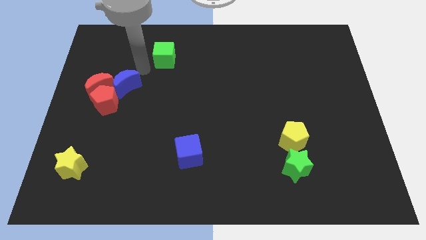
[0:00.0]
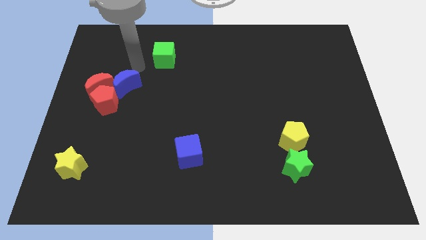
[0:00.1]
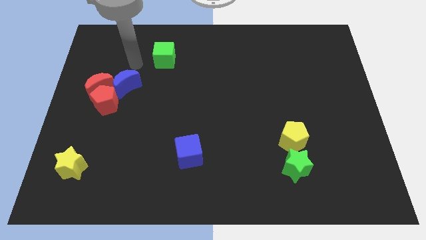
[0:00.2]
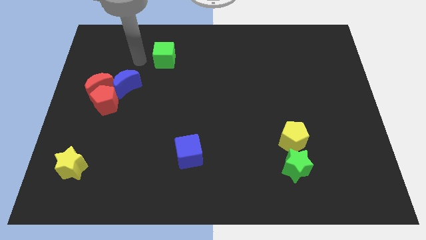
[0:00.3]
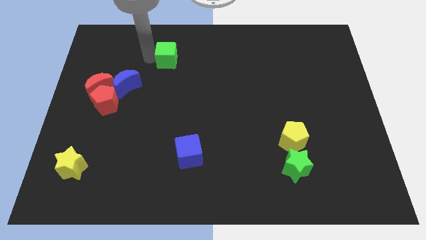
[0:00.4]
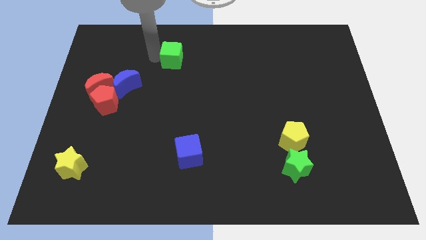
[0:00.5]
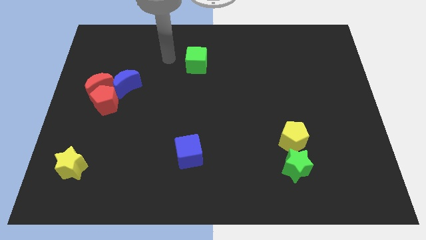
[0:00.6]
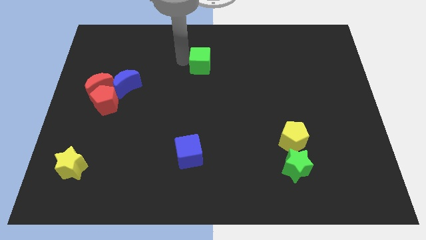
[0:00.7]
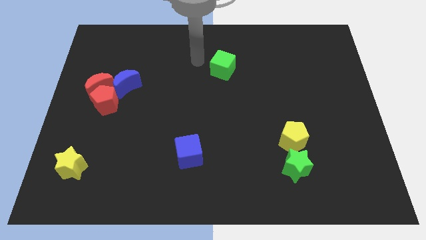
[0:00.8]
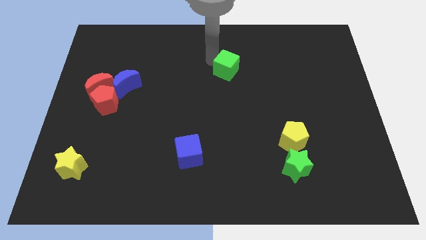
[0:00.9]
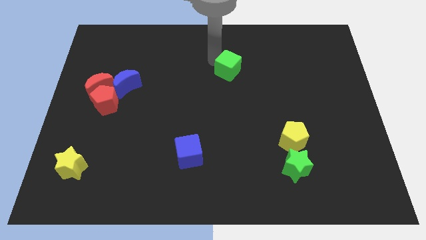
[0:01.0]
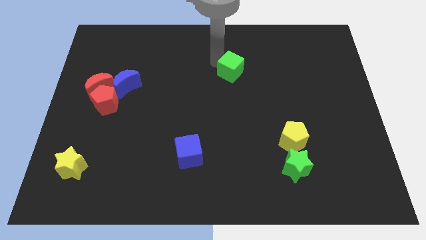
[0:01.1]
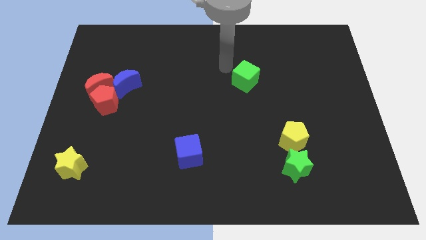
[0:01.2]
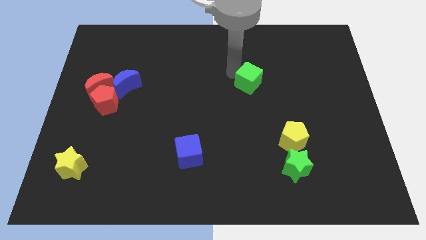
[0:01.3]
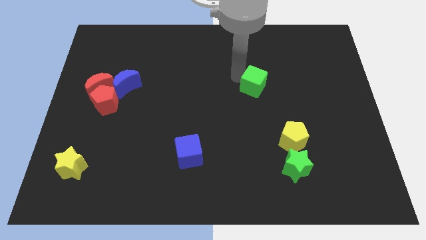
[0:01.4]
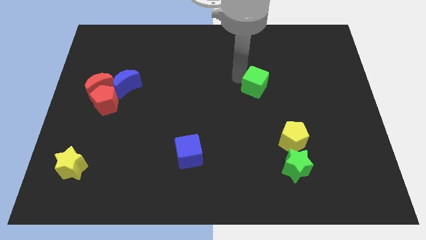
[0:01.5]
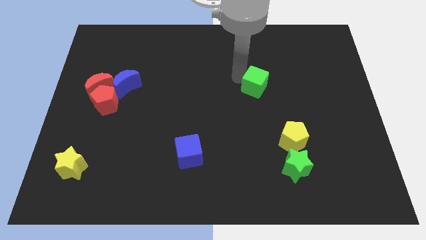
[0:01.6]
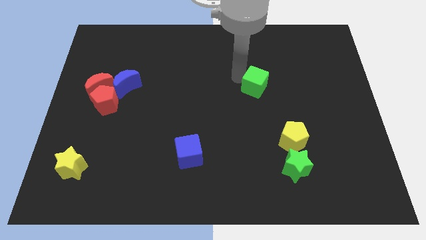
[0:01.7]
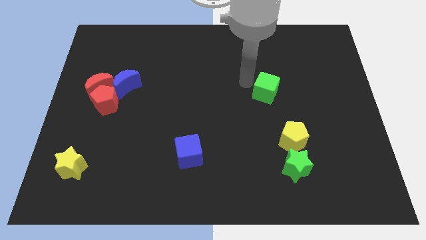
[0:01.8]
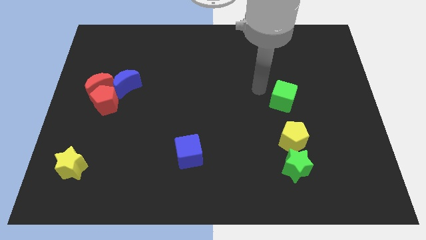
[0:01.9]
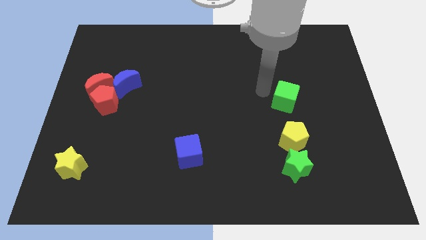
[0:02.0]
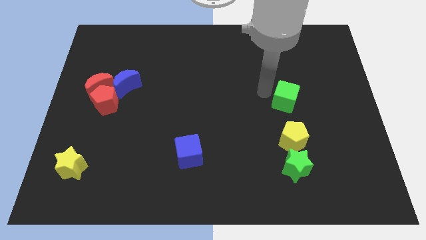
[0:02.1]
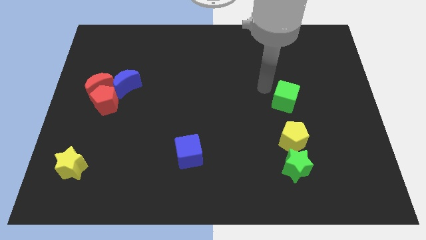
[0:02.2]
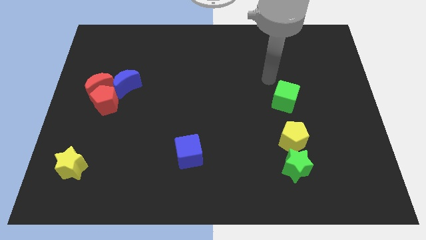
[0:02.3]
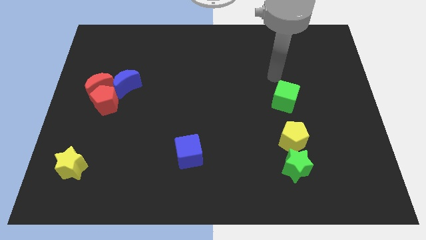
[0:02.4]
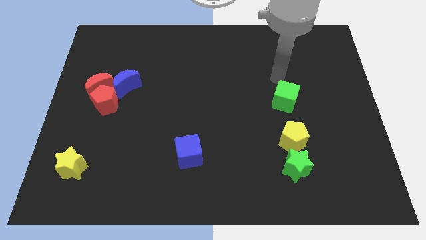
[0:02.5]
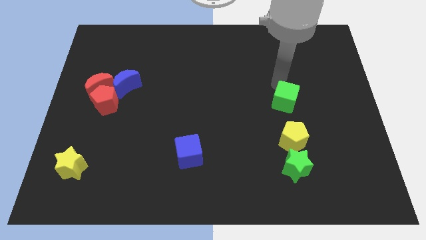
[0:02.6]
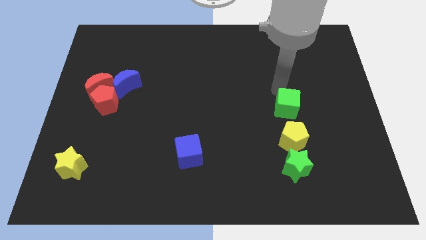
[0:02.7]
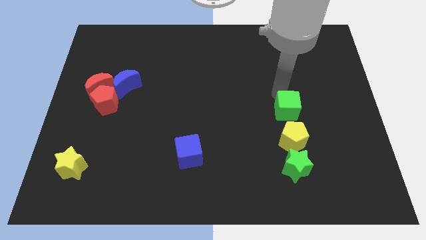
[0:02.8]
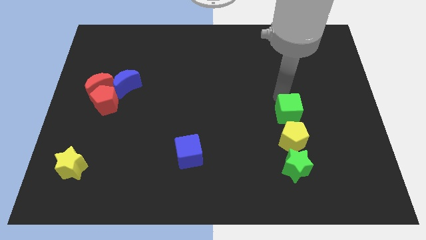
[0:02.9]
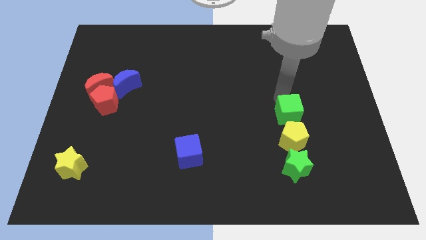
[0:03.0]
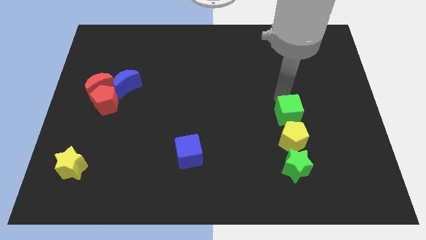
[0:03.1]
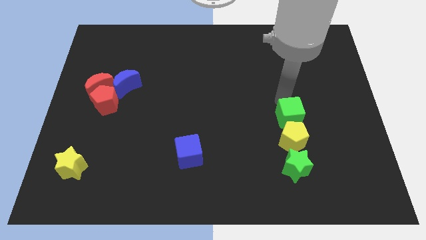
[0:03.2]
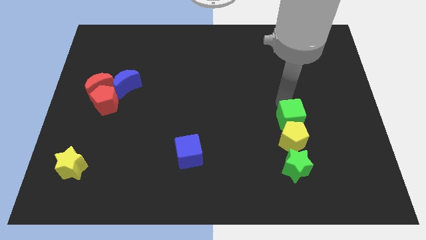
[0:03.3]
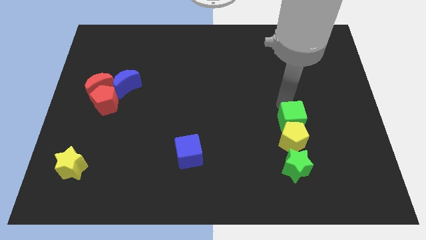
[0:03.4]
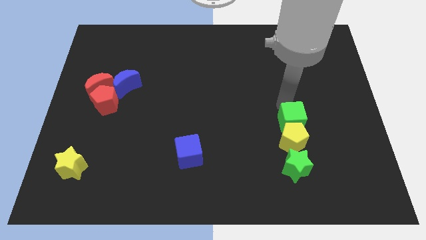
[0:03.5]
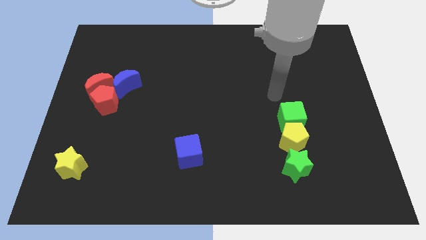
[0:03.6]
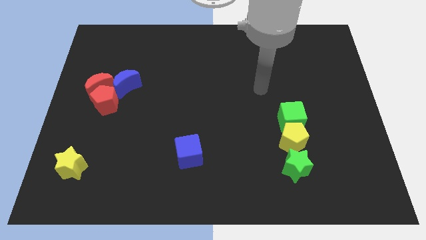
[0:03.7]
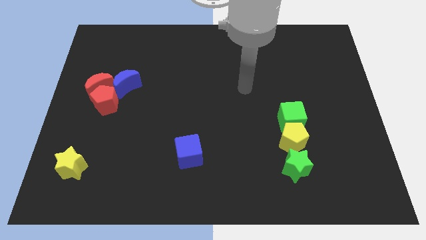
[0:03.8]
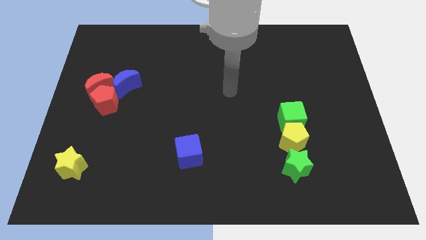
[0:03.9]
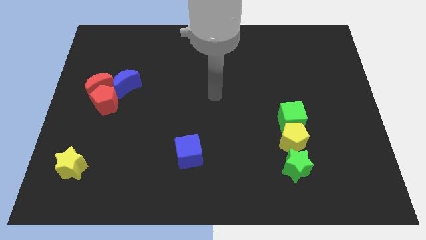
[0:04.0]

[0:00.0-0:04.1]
move the green cube towards the yellow pentagon

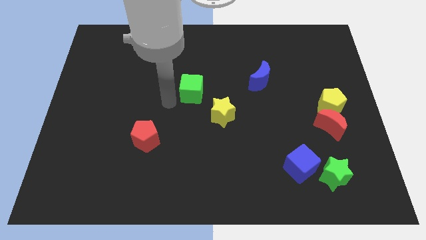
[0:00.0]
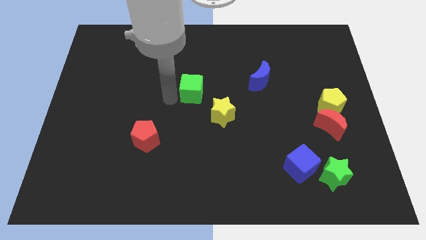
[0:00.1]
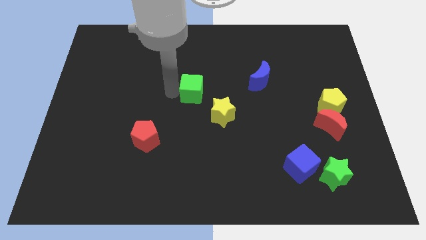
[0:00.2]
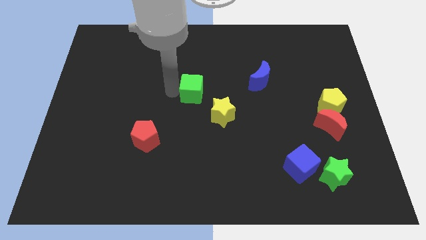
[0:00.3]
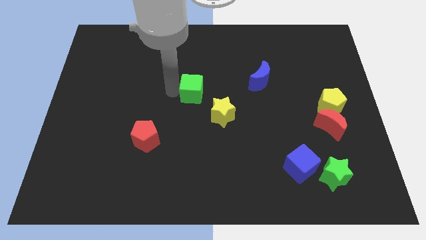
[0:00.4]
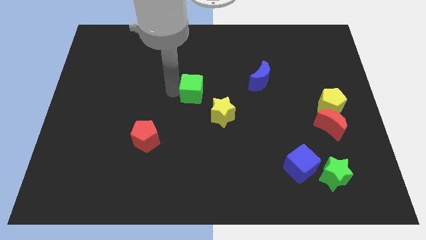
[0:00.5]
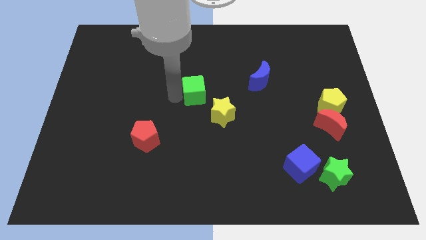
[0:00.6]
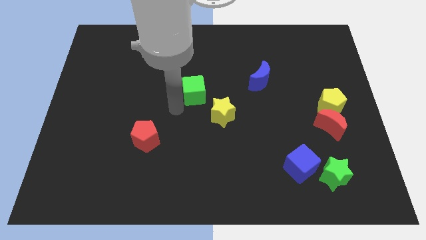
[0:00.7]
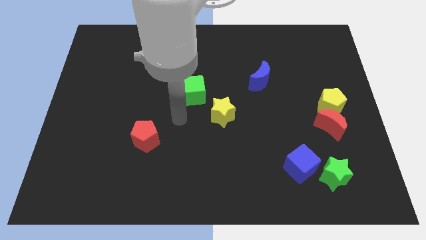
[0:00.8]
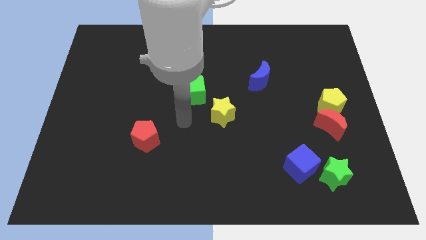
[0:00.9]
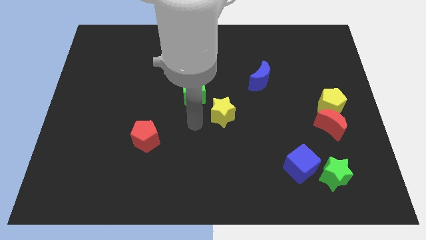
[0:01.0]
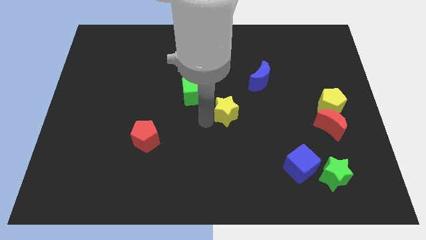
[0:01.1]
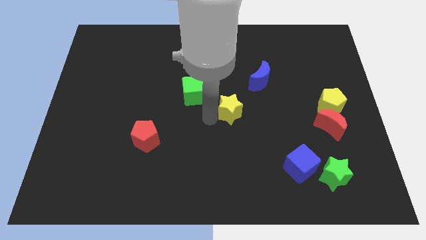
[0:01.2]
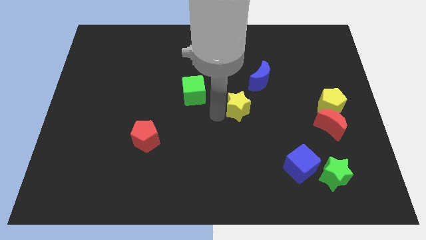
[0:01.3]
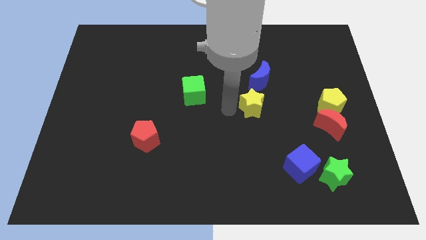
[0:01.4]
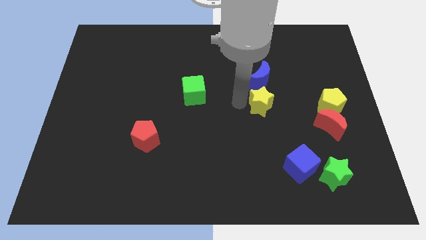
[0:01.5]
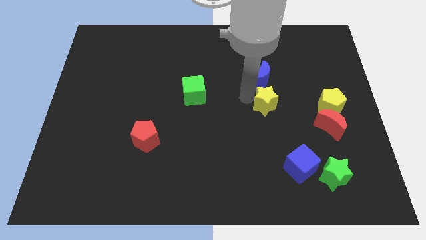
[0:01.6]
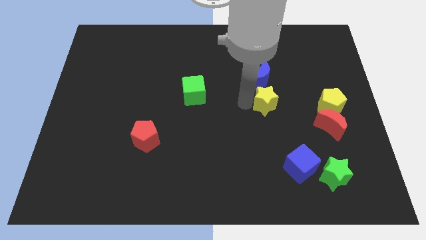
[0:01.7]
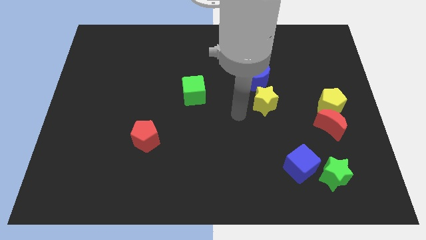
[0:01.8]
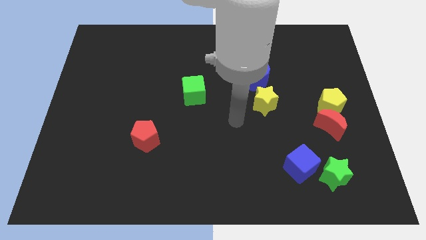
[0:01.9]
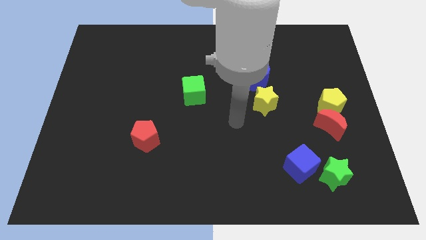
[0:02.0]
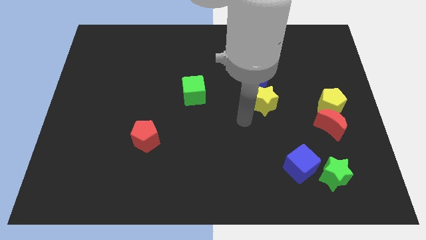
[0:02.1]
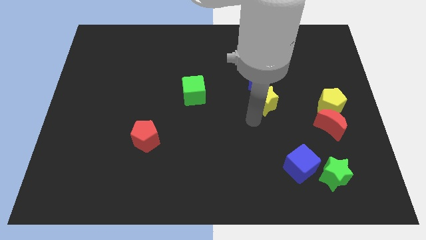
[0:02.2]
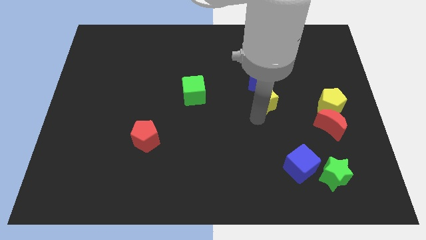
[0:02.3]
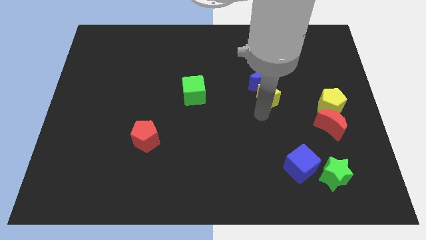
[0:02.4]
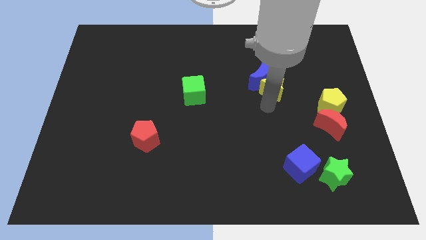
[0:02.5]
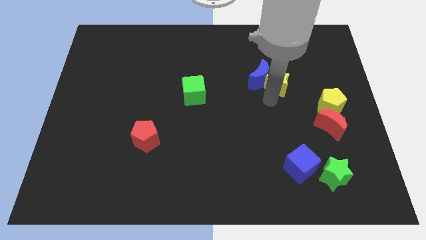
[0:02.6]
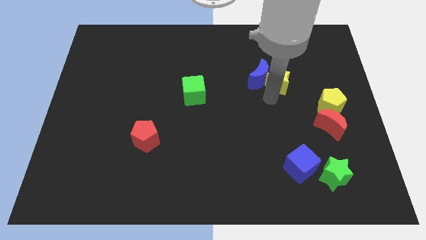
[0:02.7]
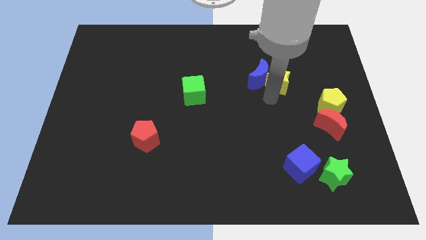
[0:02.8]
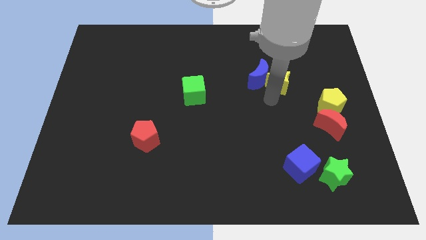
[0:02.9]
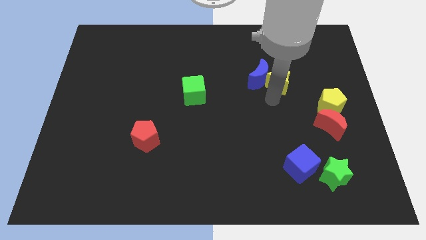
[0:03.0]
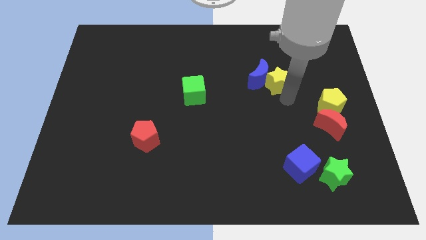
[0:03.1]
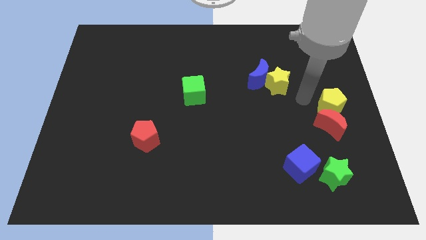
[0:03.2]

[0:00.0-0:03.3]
push the yellow star close to the blue crescent

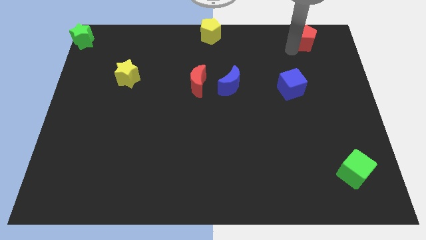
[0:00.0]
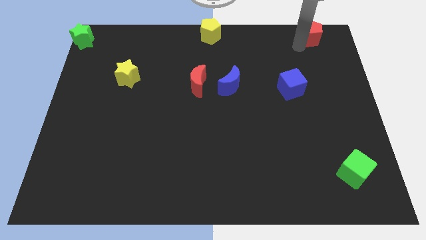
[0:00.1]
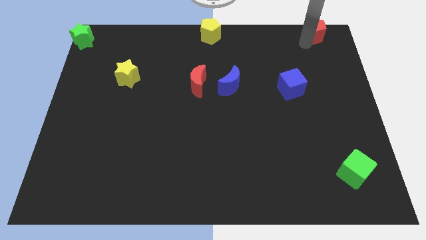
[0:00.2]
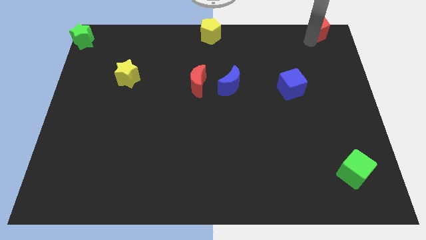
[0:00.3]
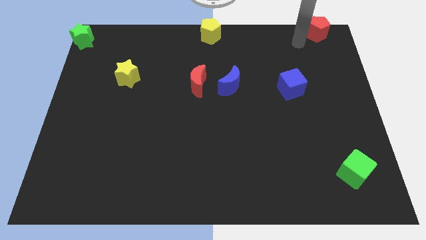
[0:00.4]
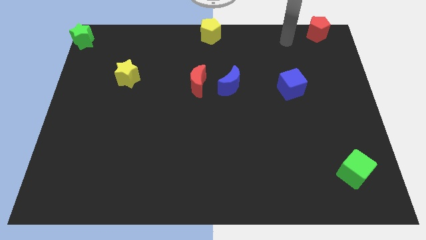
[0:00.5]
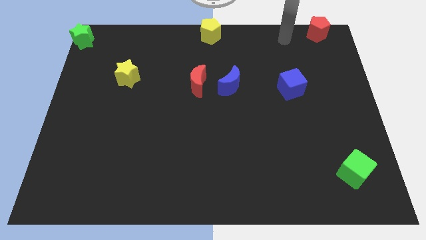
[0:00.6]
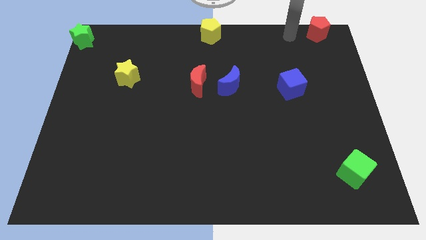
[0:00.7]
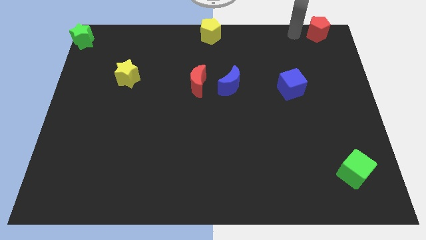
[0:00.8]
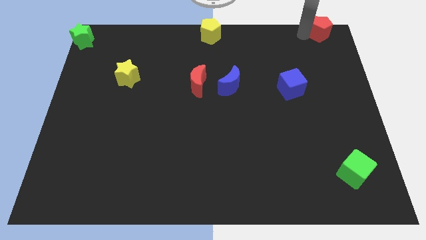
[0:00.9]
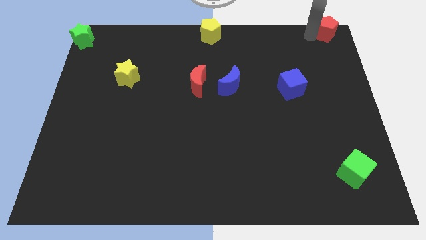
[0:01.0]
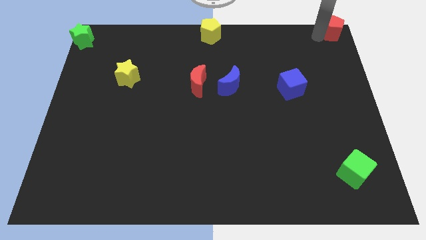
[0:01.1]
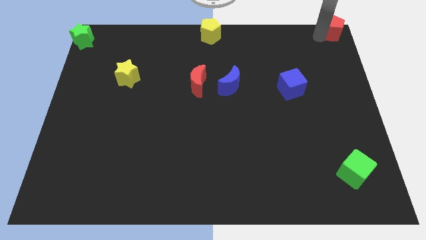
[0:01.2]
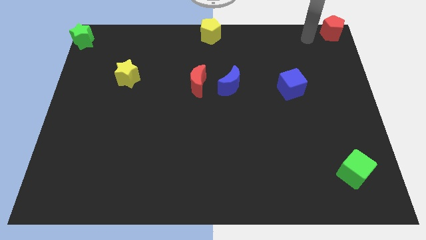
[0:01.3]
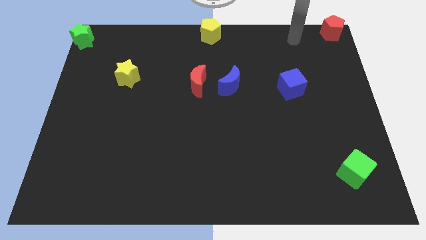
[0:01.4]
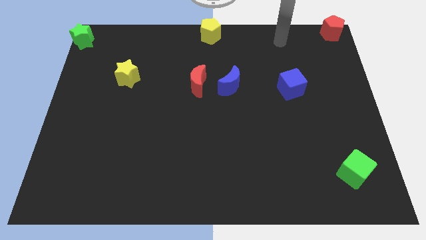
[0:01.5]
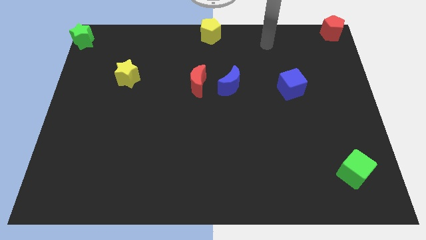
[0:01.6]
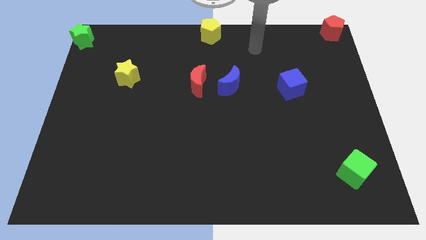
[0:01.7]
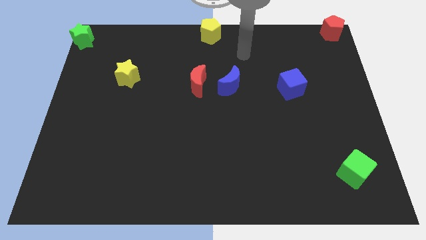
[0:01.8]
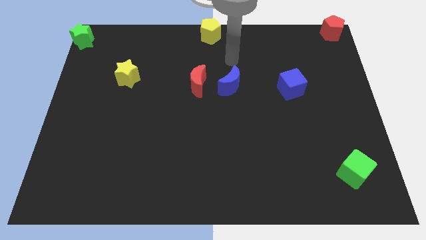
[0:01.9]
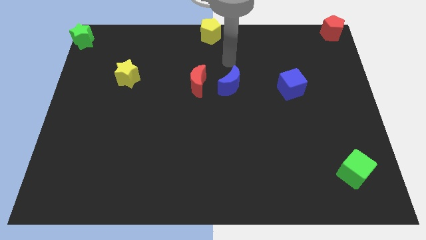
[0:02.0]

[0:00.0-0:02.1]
slide red pentagon to the top right corner
